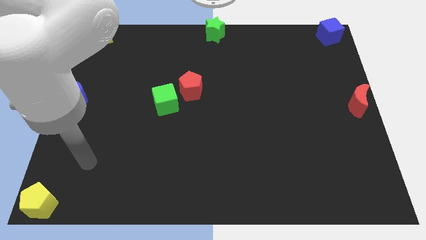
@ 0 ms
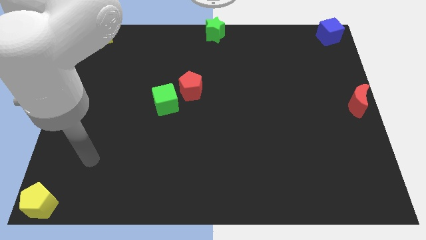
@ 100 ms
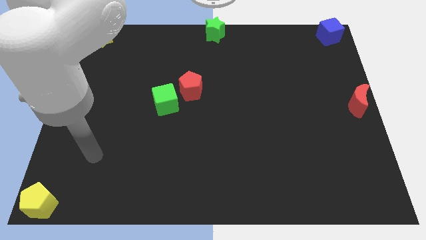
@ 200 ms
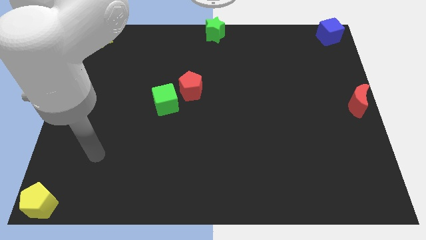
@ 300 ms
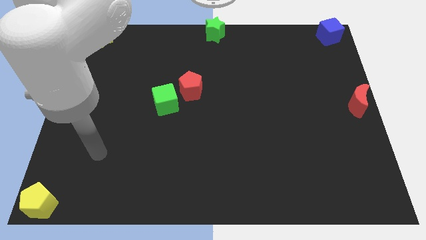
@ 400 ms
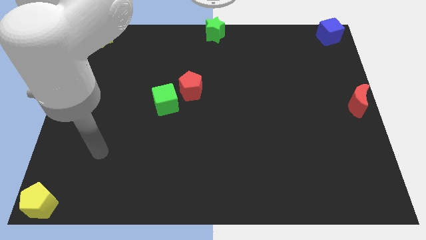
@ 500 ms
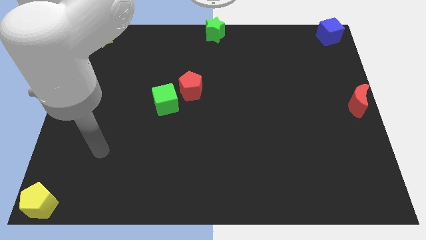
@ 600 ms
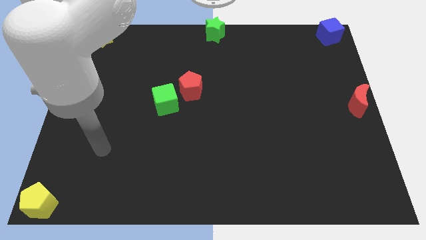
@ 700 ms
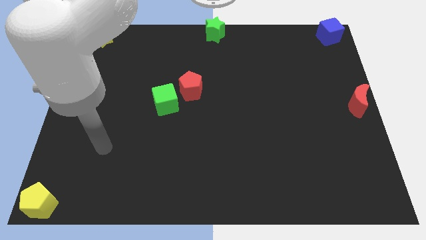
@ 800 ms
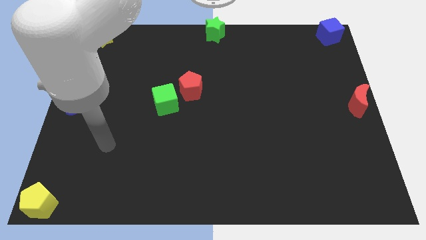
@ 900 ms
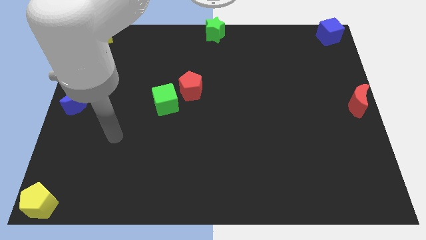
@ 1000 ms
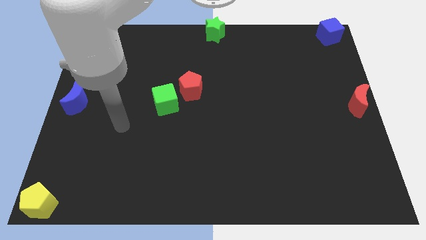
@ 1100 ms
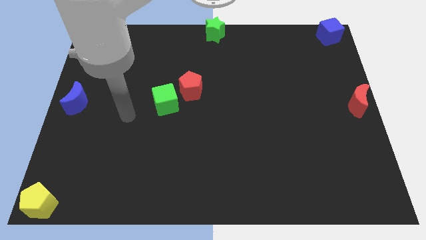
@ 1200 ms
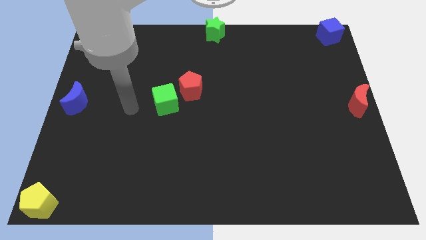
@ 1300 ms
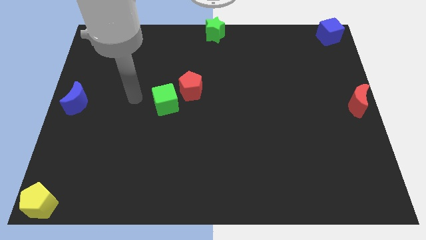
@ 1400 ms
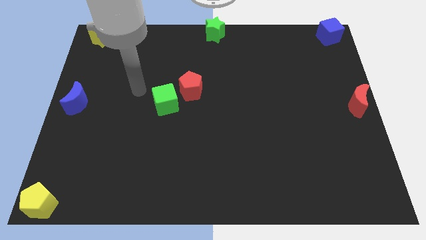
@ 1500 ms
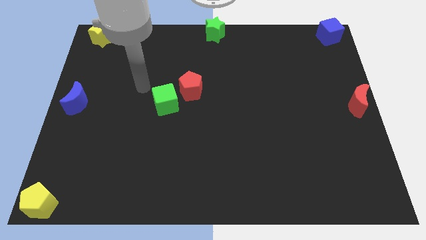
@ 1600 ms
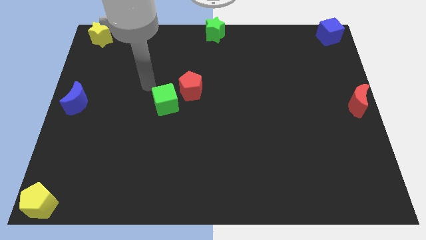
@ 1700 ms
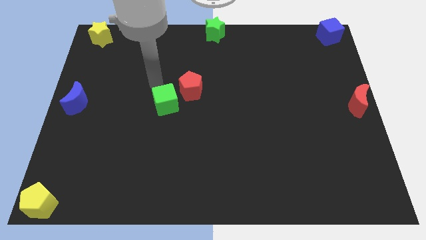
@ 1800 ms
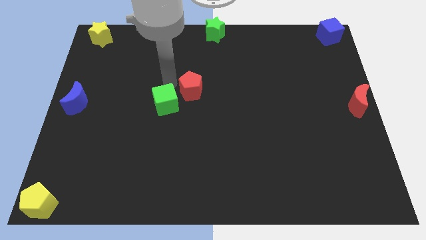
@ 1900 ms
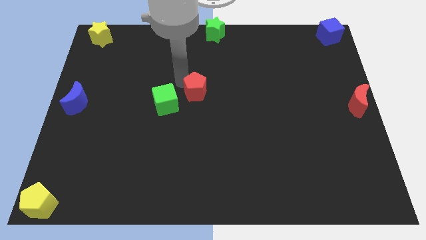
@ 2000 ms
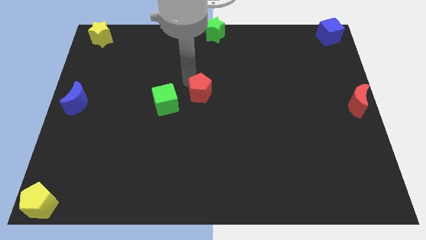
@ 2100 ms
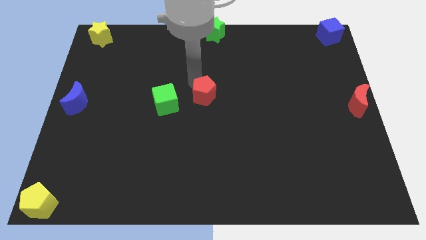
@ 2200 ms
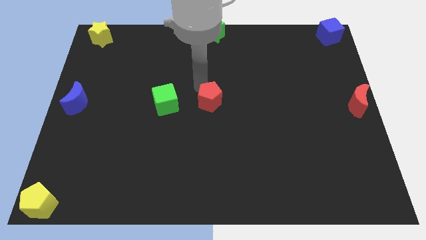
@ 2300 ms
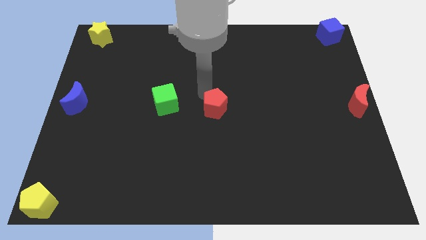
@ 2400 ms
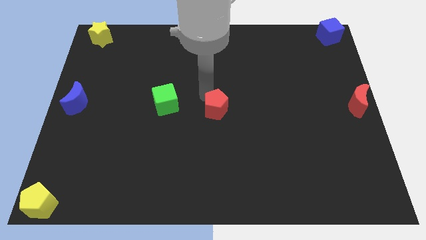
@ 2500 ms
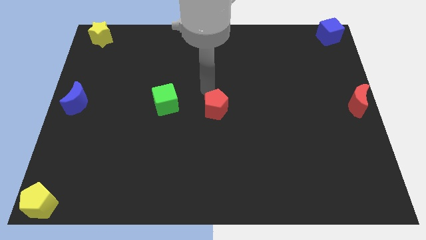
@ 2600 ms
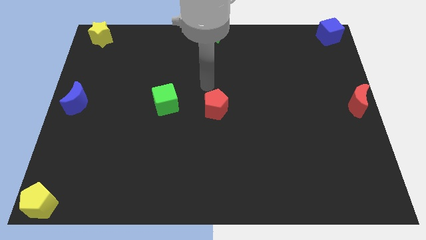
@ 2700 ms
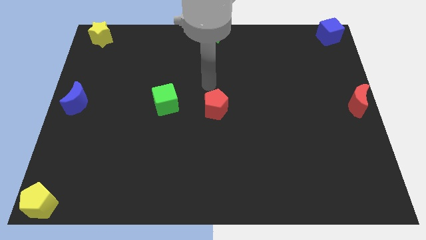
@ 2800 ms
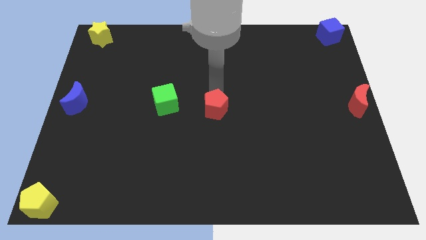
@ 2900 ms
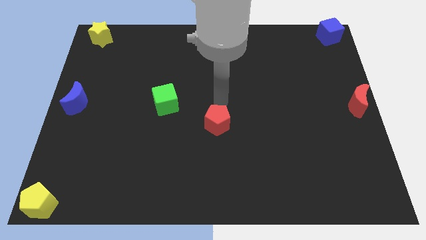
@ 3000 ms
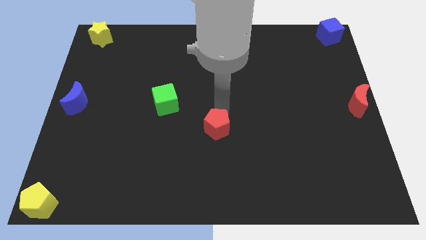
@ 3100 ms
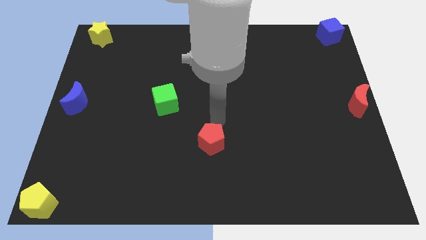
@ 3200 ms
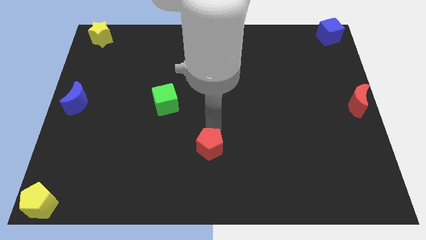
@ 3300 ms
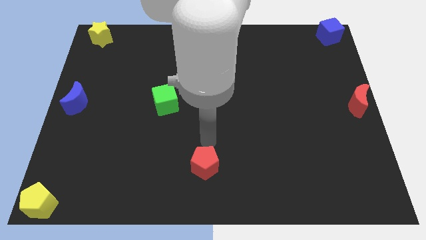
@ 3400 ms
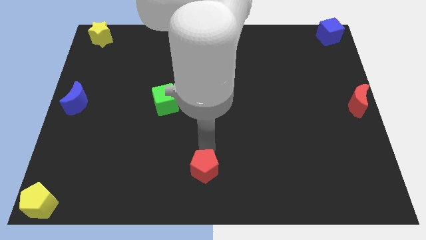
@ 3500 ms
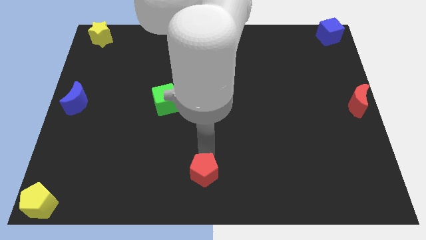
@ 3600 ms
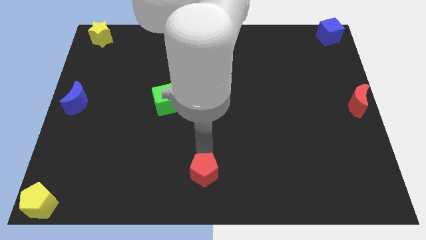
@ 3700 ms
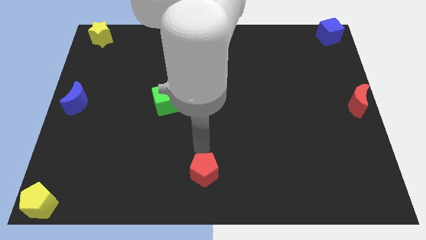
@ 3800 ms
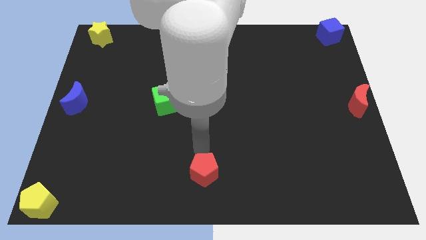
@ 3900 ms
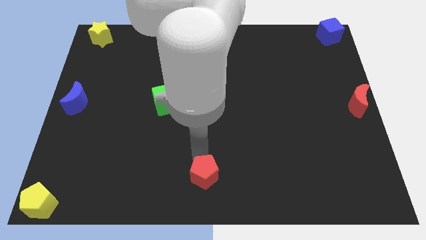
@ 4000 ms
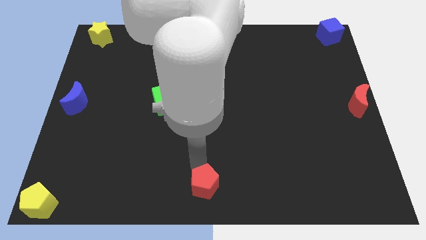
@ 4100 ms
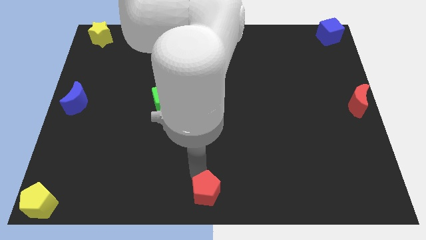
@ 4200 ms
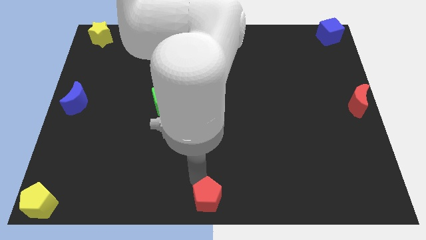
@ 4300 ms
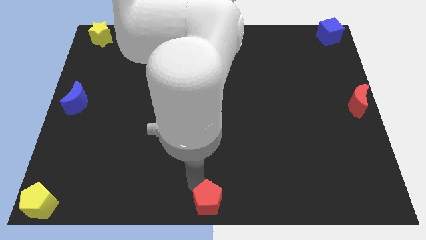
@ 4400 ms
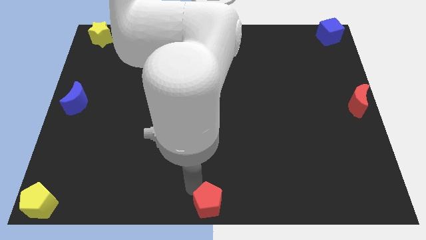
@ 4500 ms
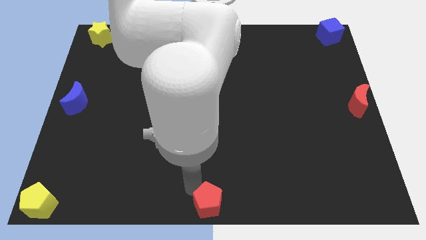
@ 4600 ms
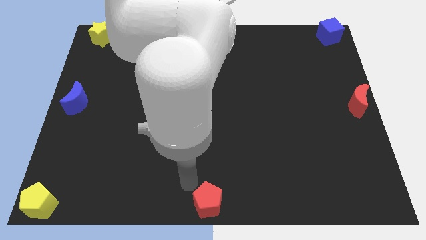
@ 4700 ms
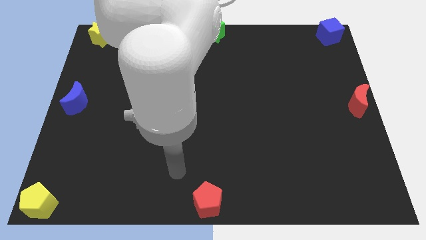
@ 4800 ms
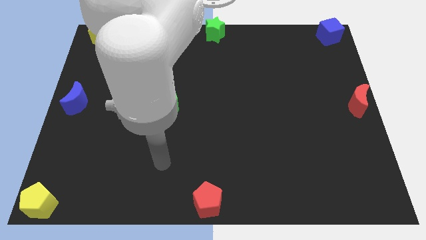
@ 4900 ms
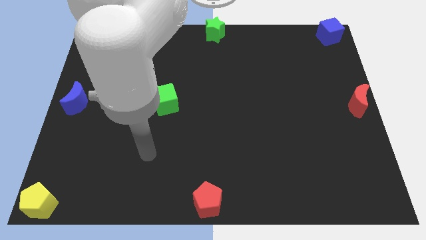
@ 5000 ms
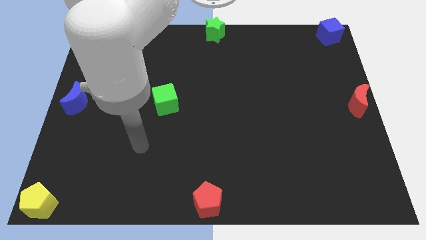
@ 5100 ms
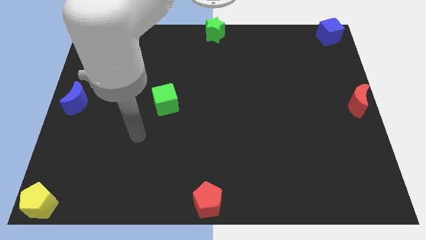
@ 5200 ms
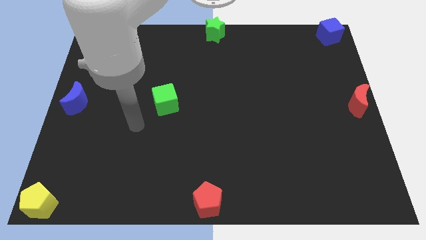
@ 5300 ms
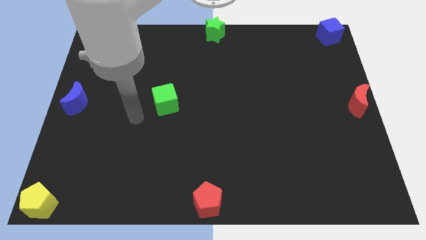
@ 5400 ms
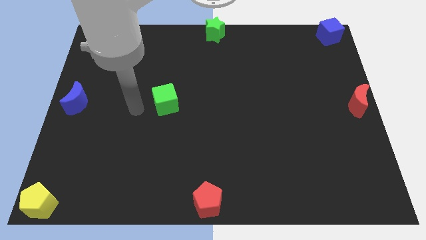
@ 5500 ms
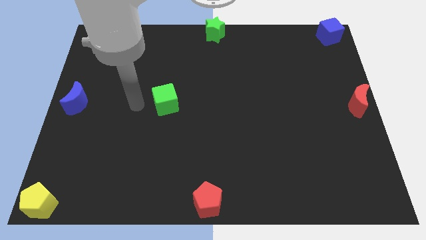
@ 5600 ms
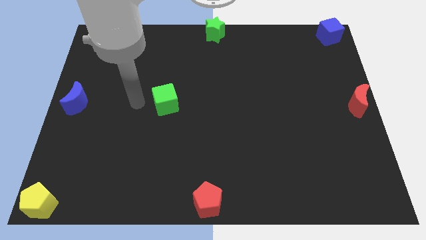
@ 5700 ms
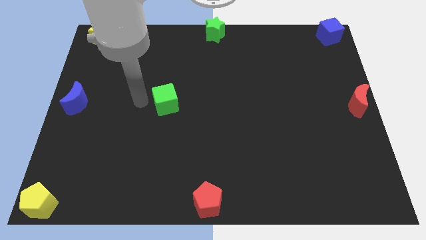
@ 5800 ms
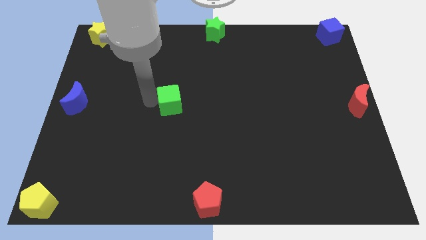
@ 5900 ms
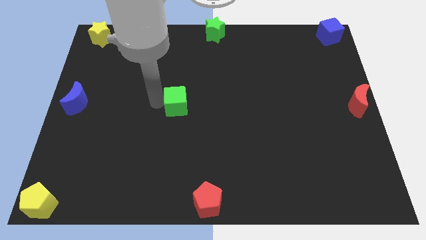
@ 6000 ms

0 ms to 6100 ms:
push the red pentagon to the bottom center

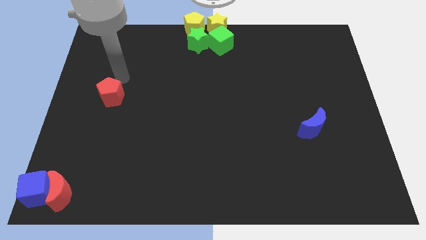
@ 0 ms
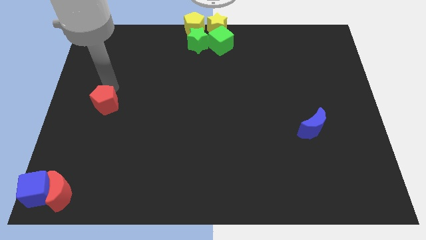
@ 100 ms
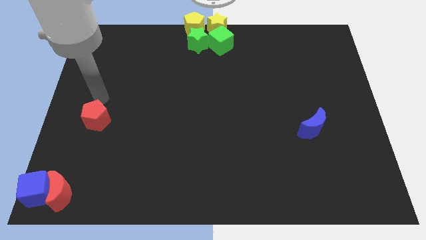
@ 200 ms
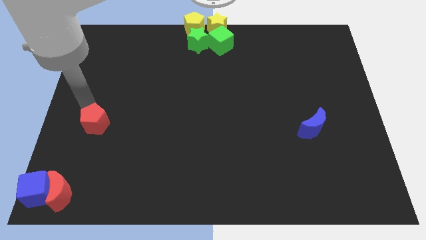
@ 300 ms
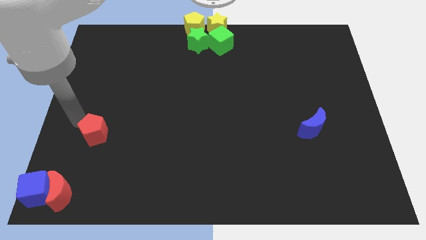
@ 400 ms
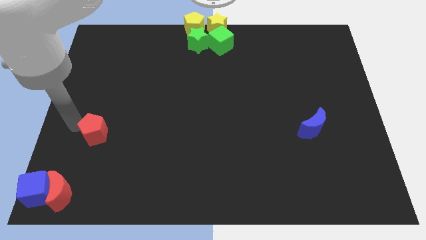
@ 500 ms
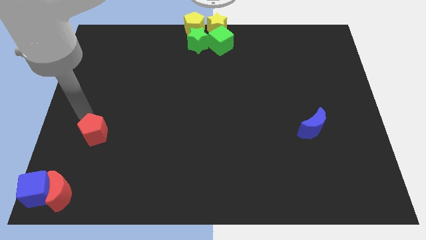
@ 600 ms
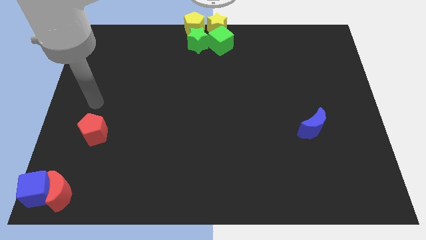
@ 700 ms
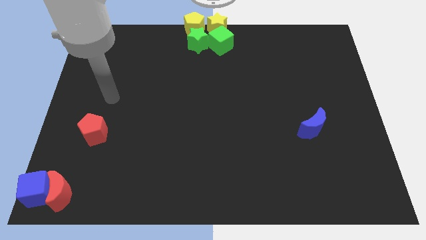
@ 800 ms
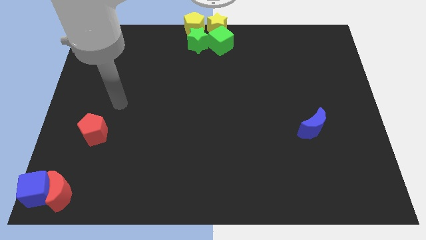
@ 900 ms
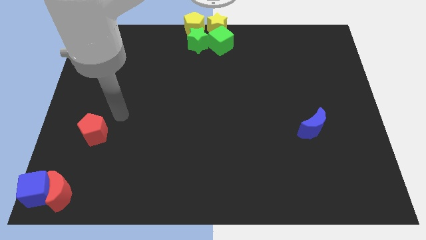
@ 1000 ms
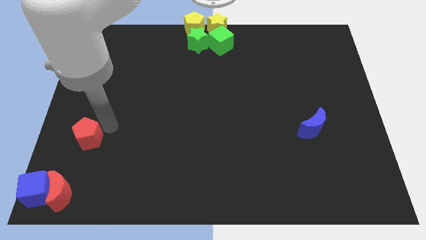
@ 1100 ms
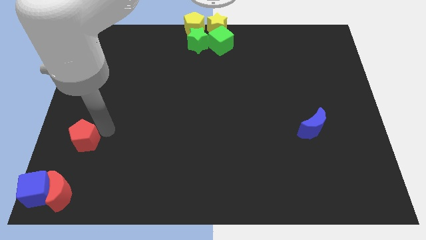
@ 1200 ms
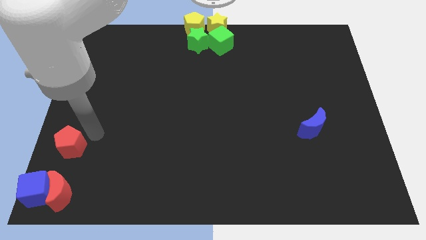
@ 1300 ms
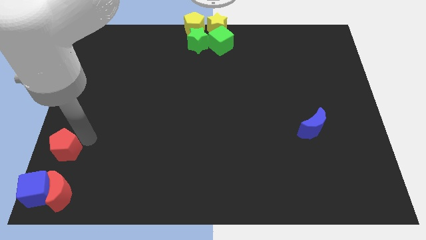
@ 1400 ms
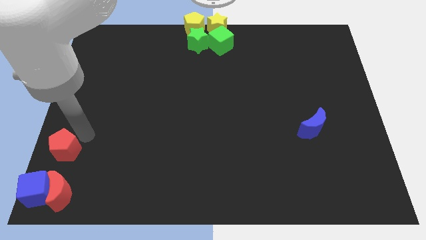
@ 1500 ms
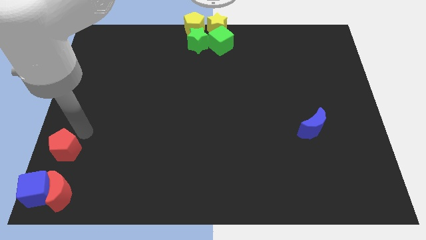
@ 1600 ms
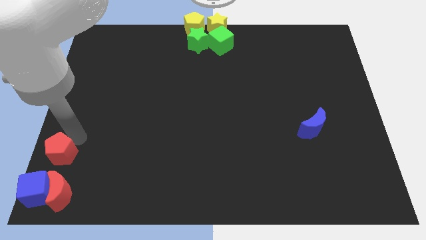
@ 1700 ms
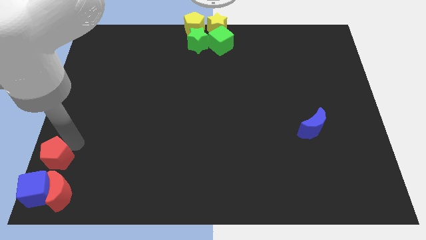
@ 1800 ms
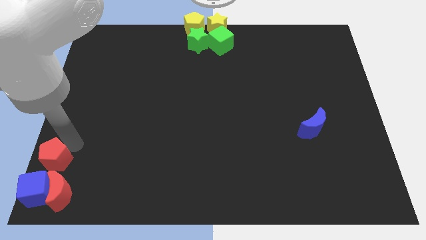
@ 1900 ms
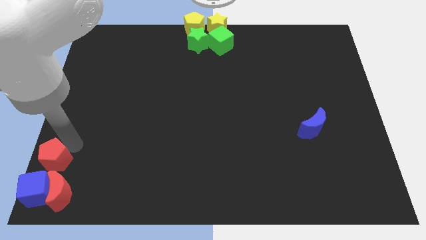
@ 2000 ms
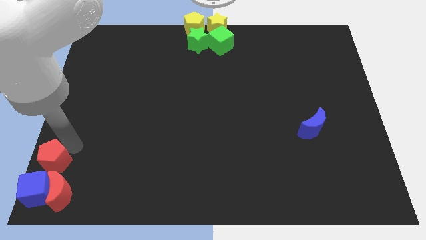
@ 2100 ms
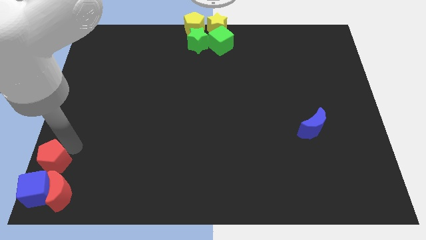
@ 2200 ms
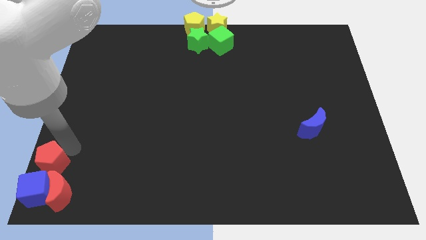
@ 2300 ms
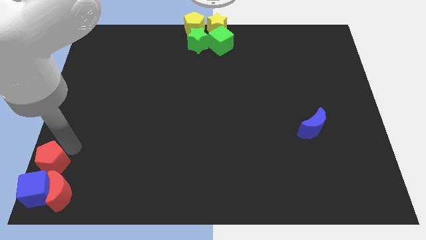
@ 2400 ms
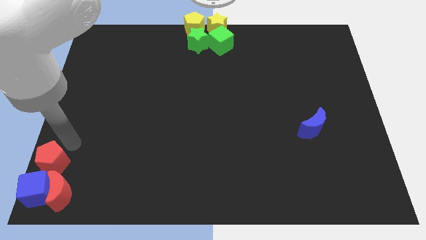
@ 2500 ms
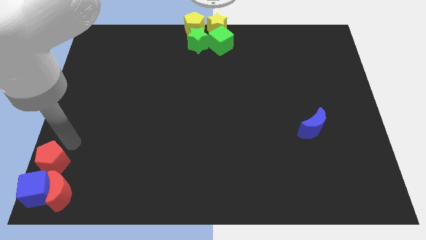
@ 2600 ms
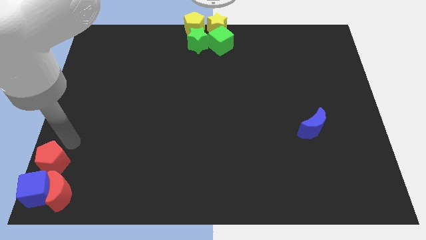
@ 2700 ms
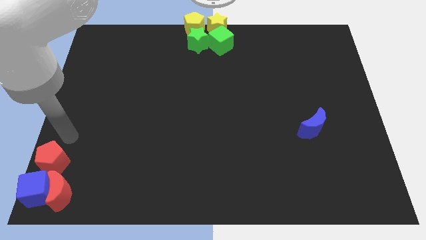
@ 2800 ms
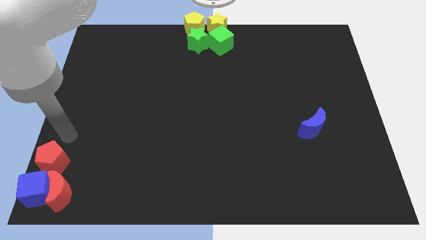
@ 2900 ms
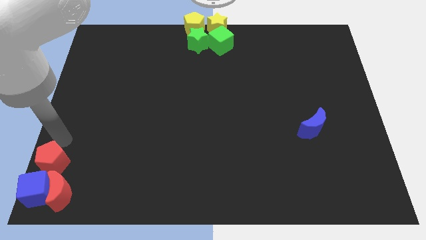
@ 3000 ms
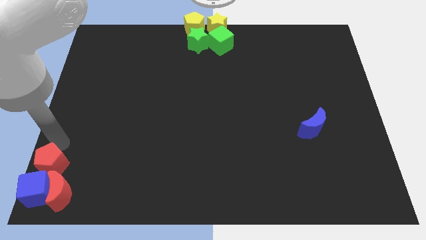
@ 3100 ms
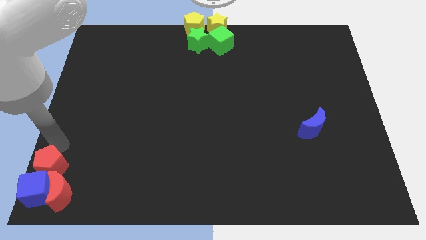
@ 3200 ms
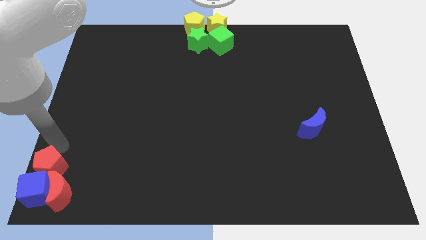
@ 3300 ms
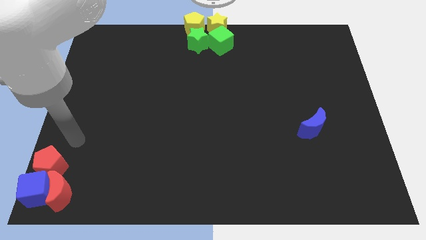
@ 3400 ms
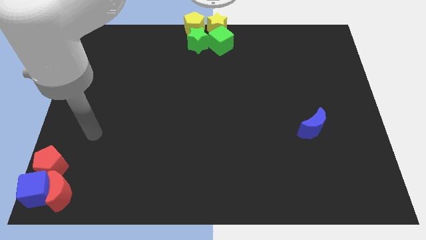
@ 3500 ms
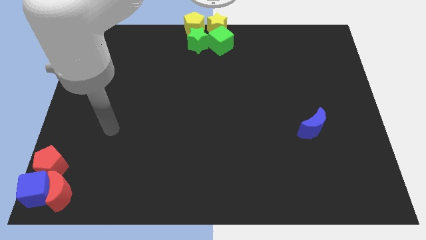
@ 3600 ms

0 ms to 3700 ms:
push the red pentagon into the blue cube
